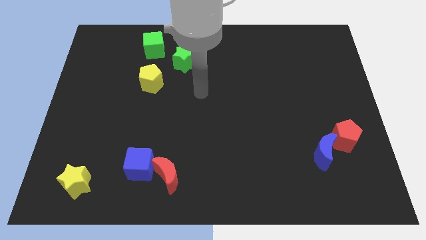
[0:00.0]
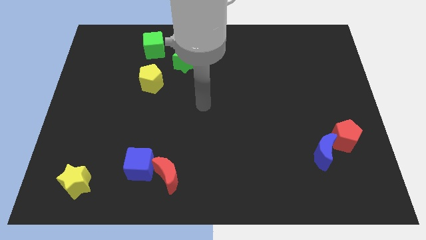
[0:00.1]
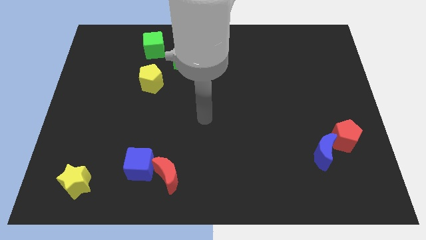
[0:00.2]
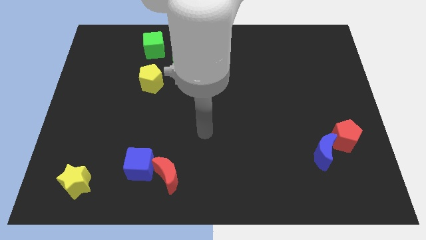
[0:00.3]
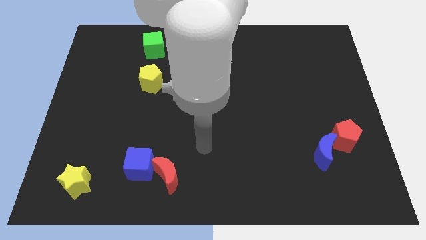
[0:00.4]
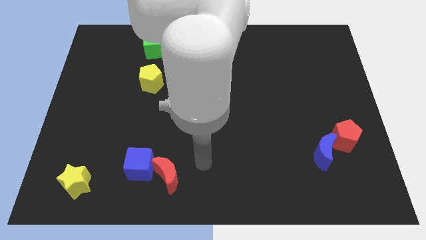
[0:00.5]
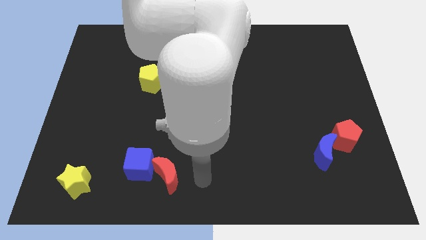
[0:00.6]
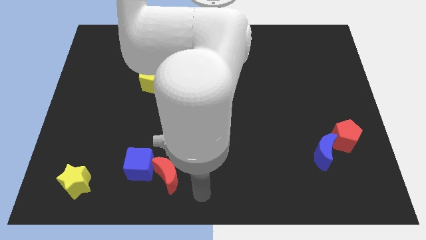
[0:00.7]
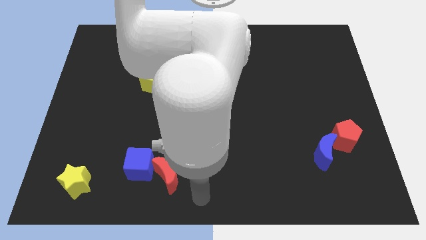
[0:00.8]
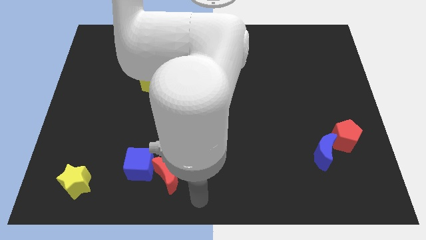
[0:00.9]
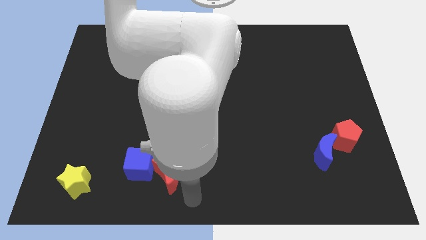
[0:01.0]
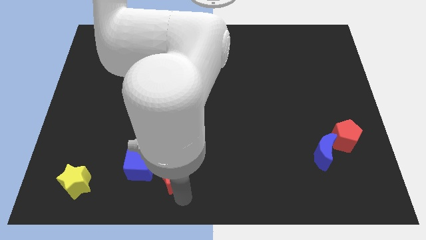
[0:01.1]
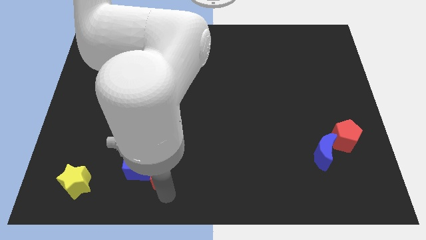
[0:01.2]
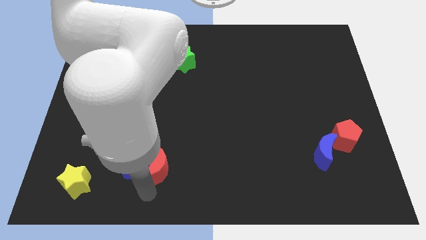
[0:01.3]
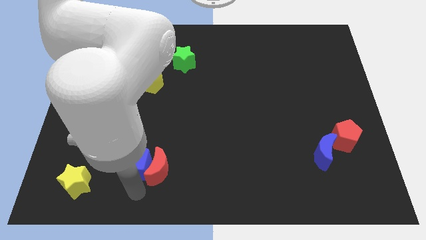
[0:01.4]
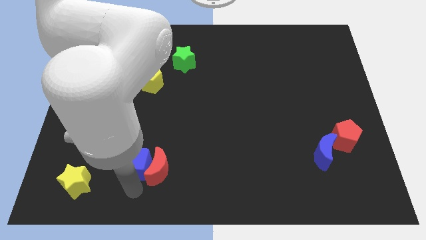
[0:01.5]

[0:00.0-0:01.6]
move your arm towards the blue cube

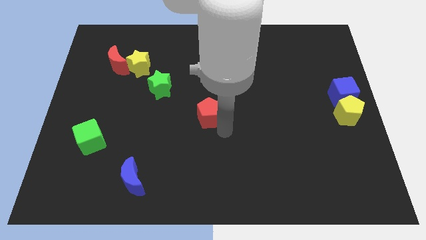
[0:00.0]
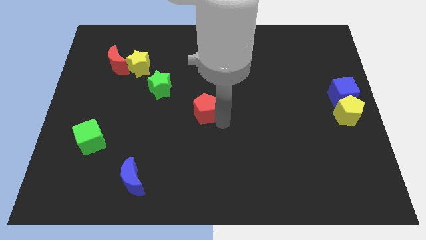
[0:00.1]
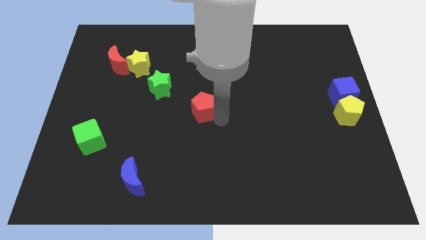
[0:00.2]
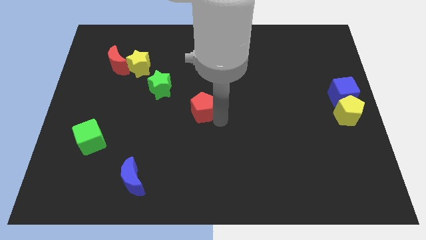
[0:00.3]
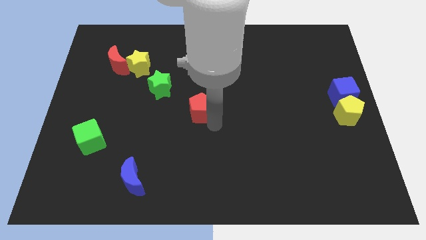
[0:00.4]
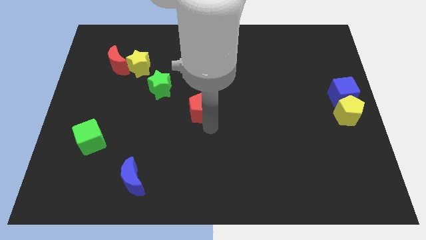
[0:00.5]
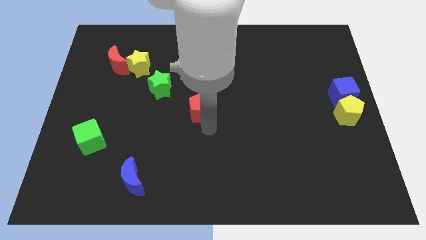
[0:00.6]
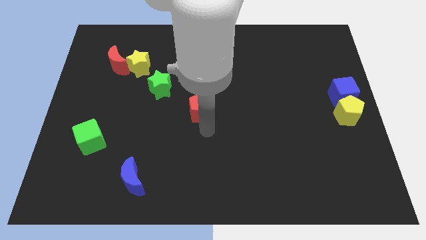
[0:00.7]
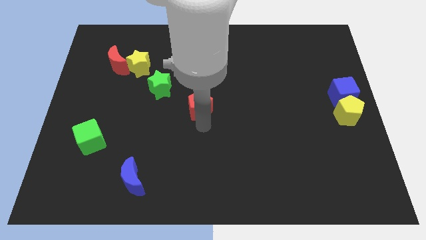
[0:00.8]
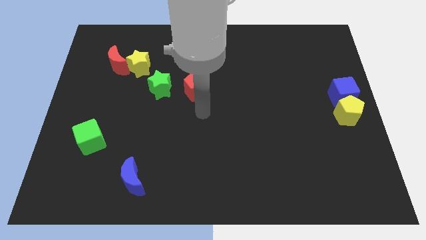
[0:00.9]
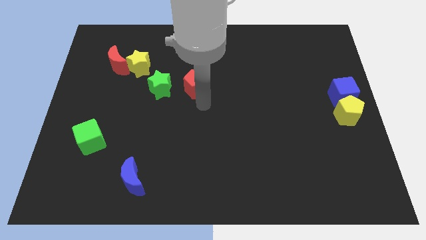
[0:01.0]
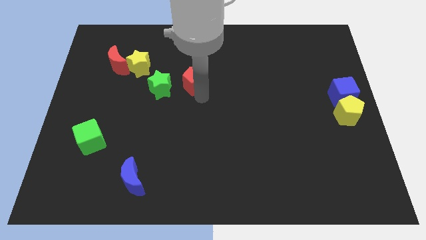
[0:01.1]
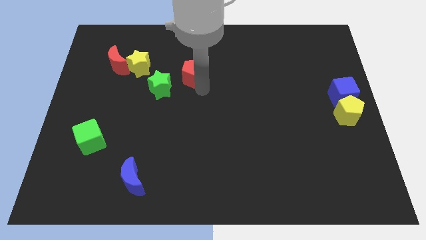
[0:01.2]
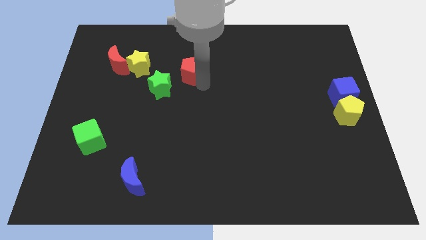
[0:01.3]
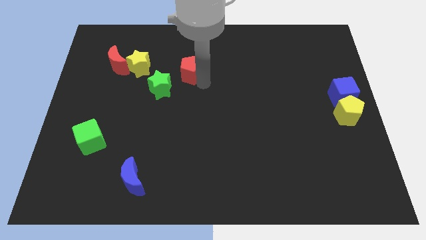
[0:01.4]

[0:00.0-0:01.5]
move the red pentagon up slightly

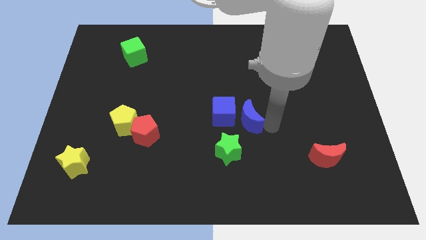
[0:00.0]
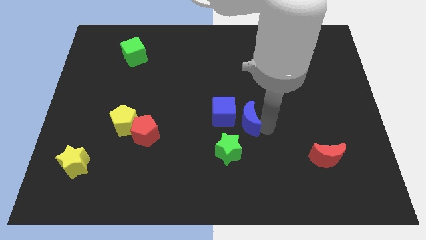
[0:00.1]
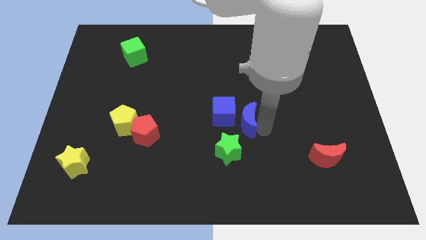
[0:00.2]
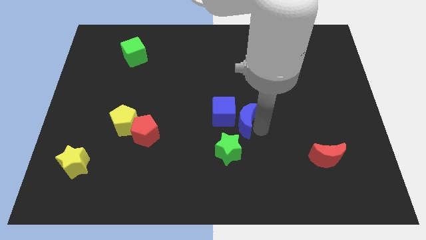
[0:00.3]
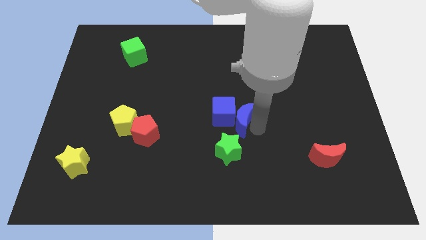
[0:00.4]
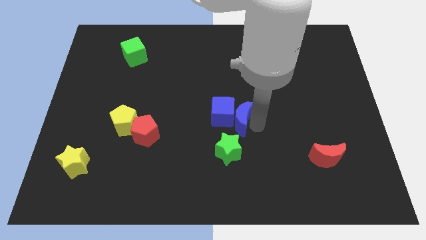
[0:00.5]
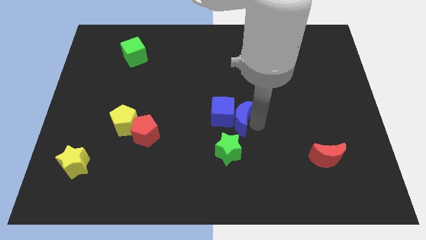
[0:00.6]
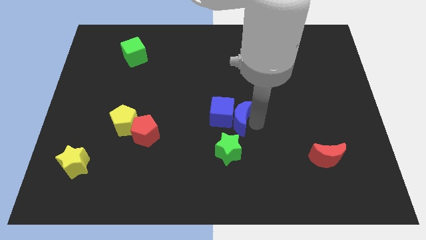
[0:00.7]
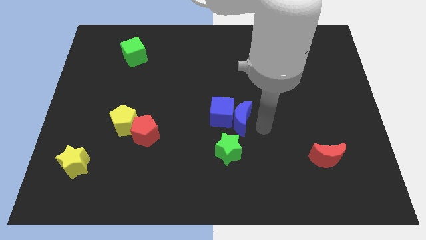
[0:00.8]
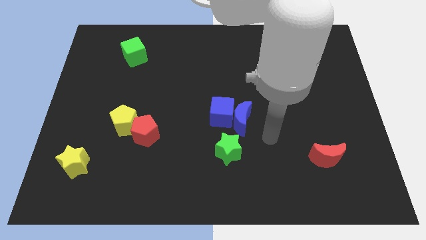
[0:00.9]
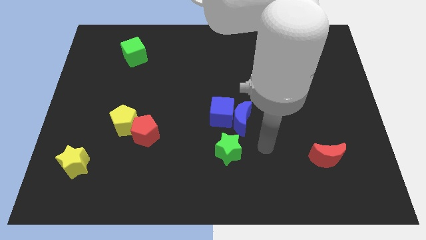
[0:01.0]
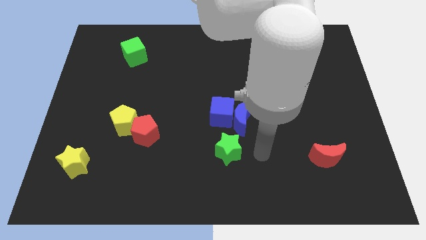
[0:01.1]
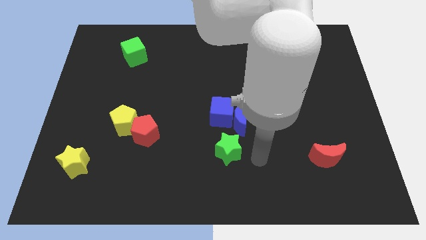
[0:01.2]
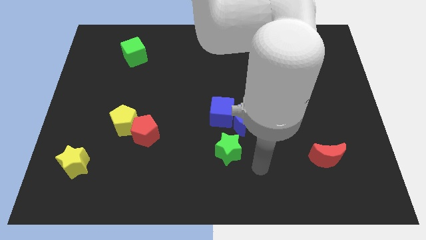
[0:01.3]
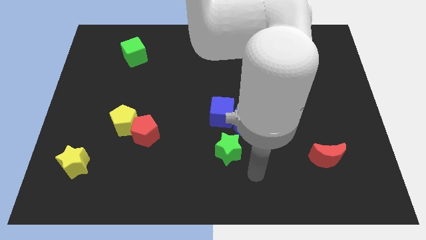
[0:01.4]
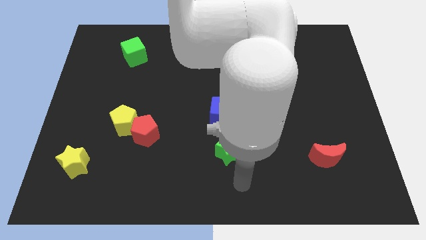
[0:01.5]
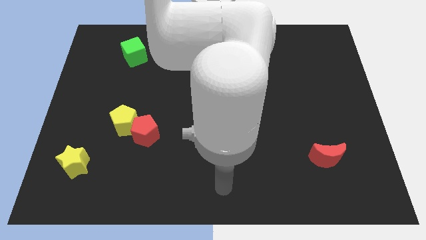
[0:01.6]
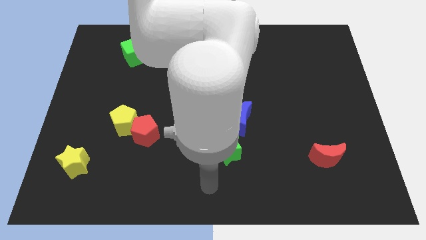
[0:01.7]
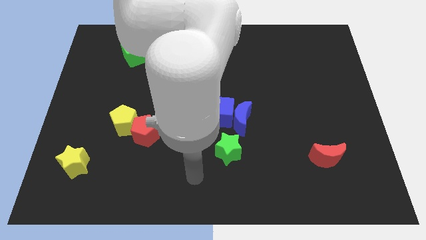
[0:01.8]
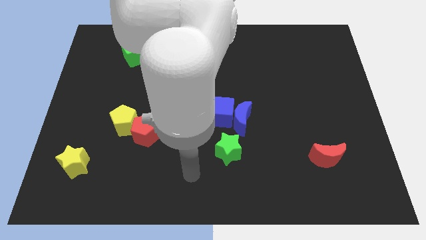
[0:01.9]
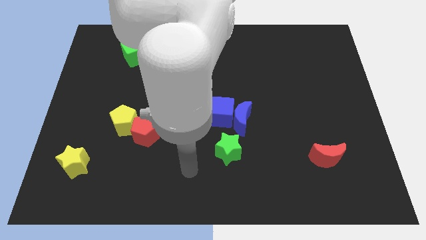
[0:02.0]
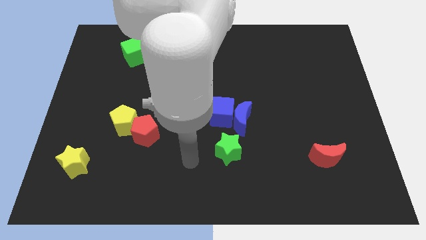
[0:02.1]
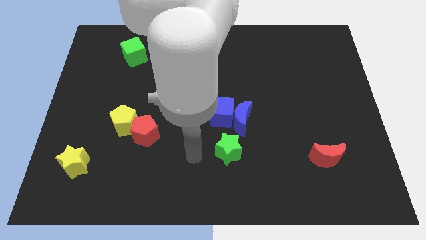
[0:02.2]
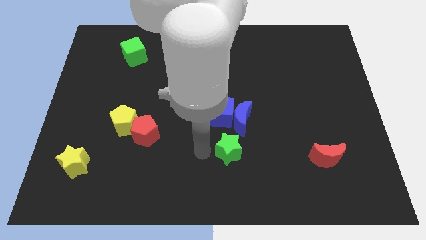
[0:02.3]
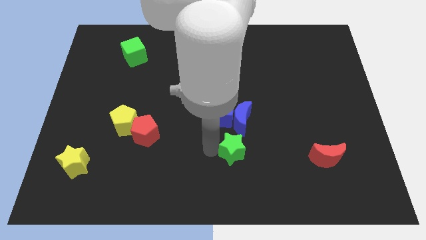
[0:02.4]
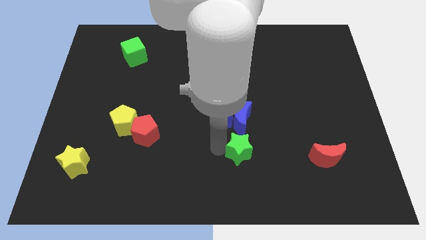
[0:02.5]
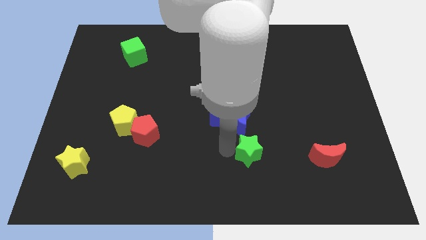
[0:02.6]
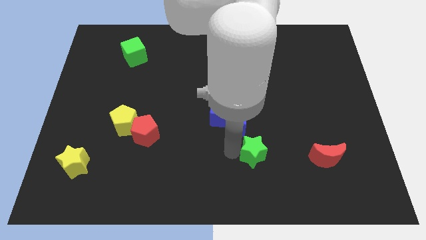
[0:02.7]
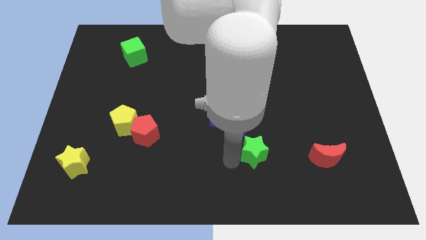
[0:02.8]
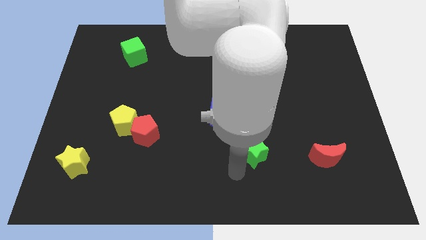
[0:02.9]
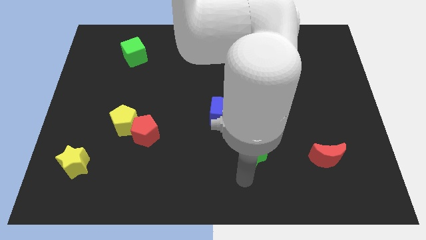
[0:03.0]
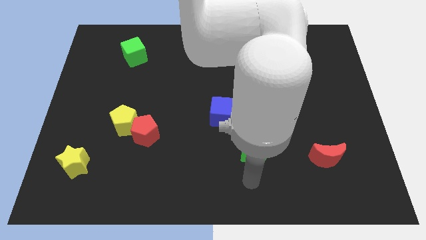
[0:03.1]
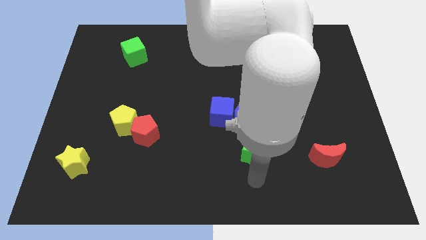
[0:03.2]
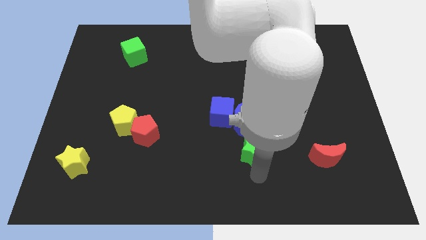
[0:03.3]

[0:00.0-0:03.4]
push the green star to the left side of the red moon

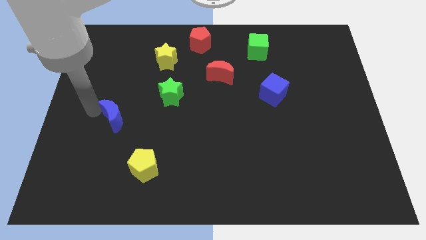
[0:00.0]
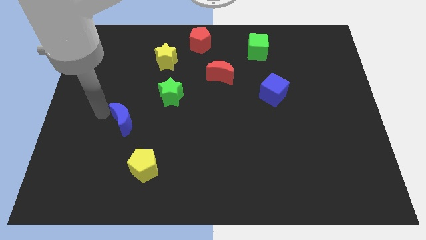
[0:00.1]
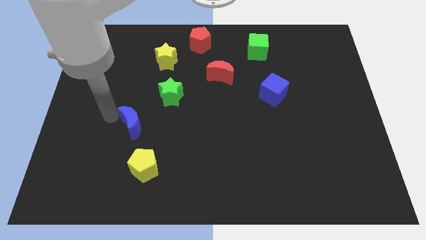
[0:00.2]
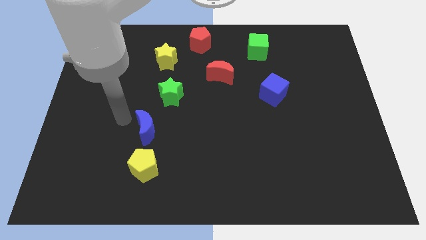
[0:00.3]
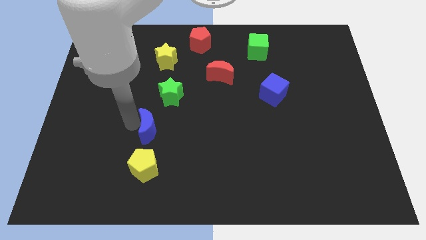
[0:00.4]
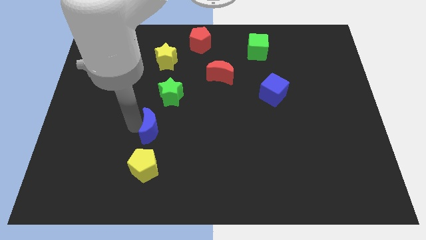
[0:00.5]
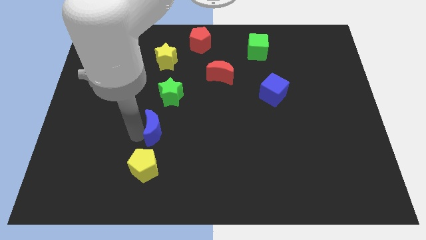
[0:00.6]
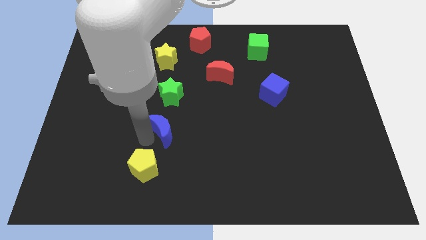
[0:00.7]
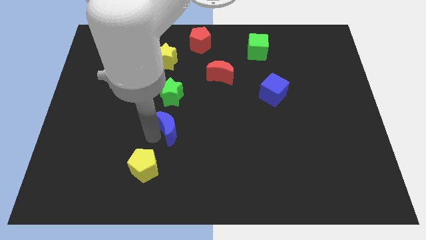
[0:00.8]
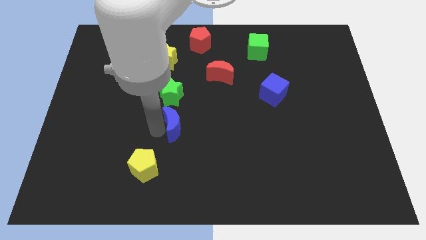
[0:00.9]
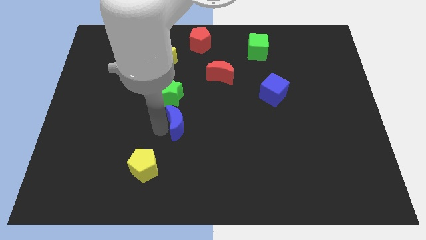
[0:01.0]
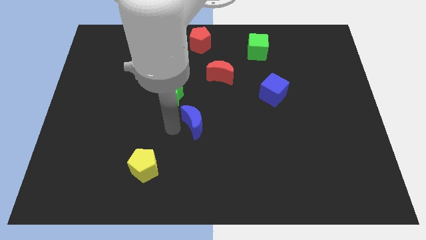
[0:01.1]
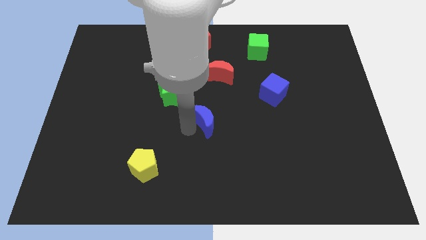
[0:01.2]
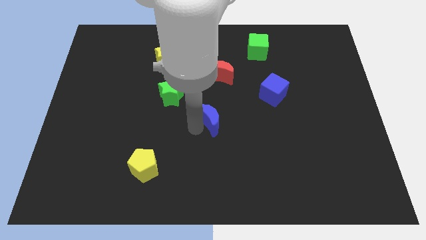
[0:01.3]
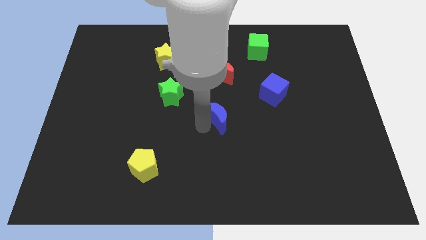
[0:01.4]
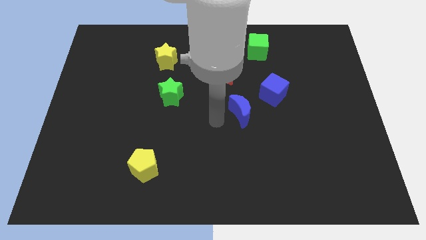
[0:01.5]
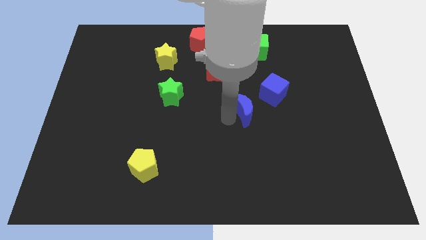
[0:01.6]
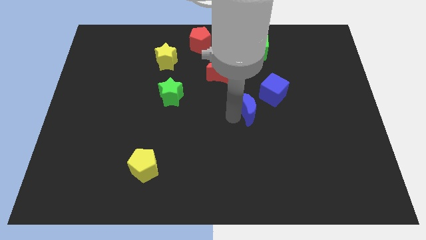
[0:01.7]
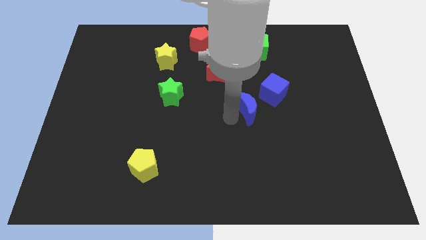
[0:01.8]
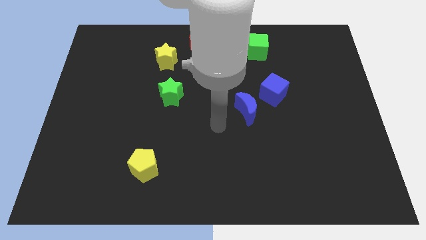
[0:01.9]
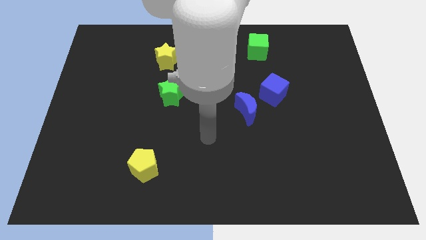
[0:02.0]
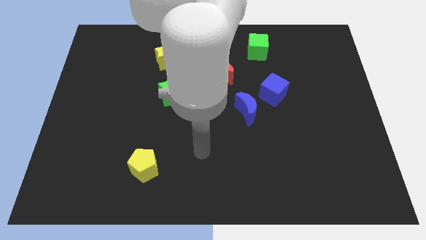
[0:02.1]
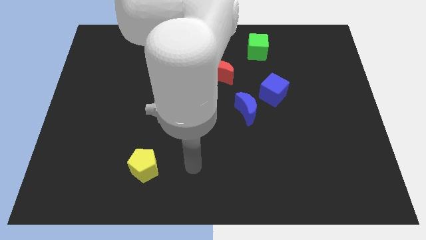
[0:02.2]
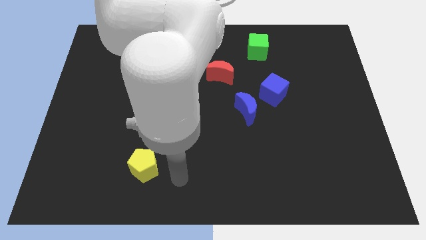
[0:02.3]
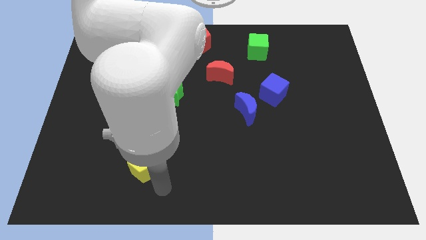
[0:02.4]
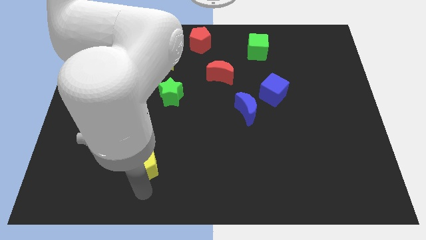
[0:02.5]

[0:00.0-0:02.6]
place the blue crescent to the bottom left of the blue cube
